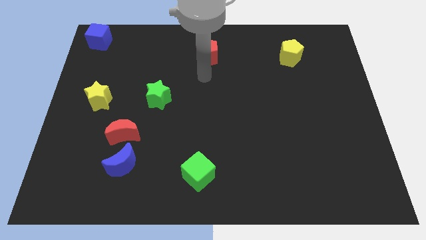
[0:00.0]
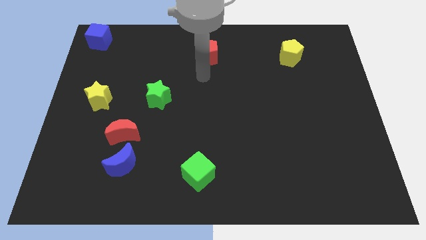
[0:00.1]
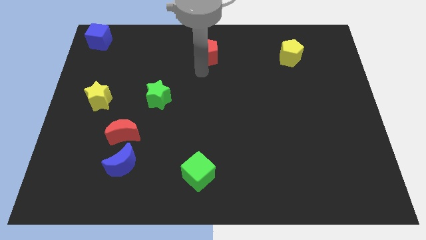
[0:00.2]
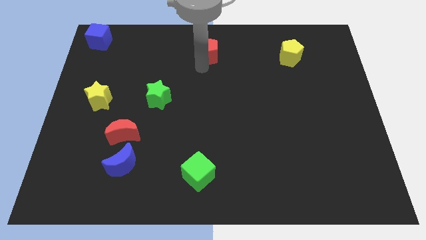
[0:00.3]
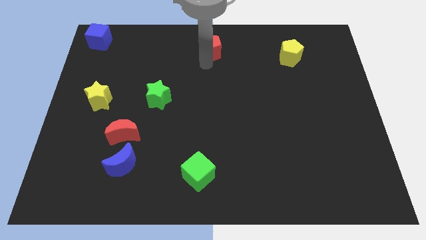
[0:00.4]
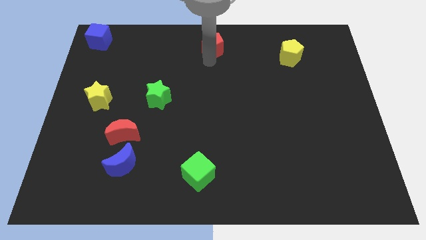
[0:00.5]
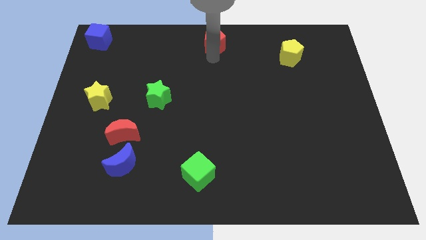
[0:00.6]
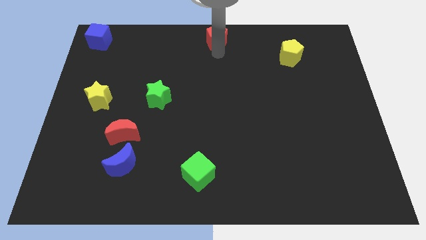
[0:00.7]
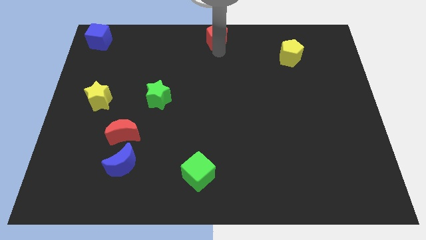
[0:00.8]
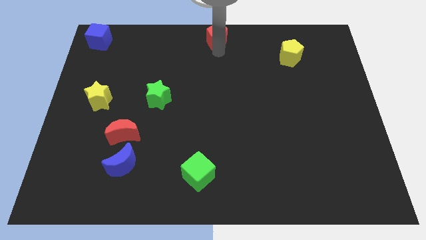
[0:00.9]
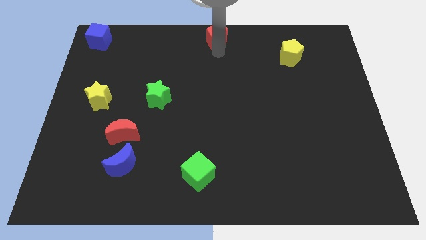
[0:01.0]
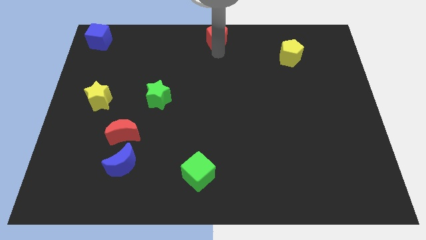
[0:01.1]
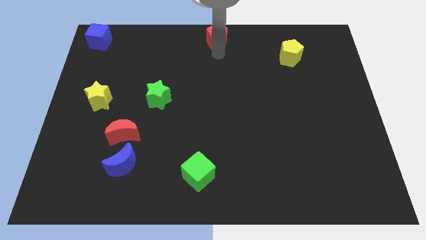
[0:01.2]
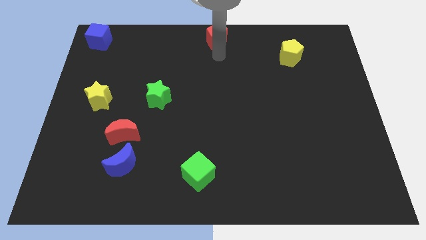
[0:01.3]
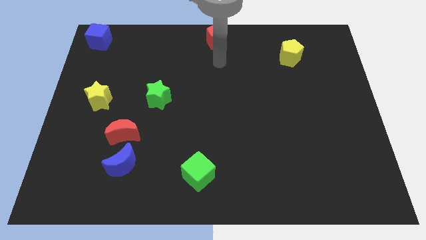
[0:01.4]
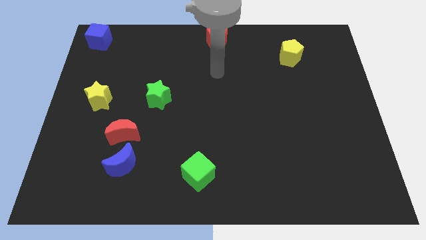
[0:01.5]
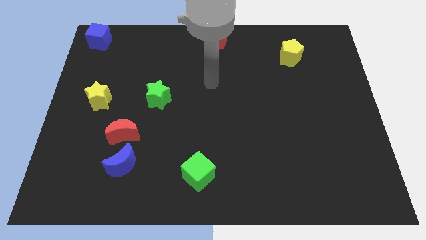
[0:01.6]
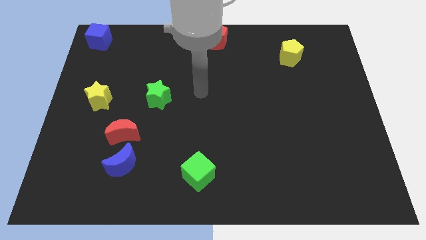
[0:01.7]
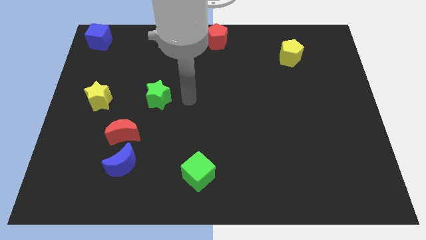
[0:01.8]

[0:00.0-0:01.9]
move red pentagon to the top center of the board

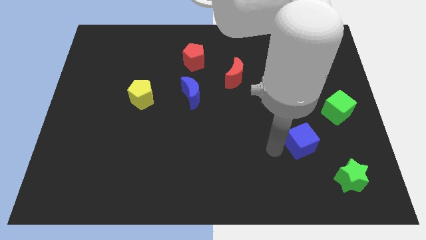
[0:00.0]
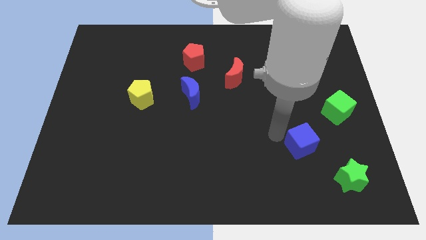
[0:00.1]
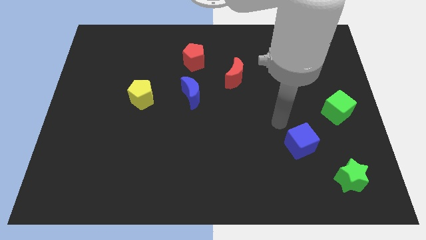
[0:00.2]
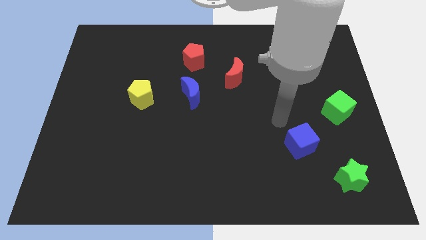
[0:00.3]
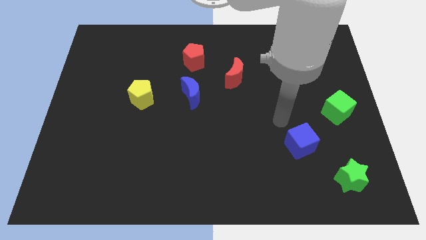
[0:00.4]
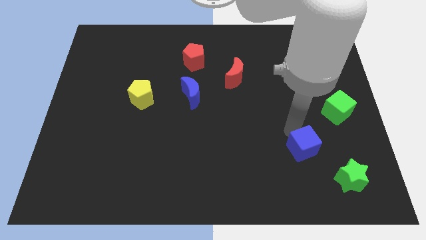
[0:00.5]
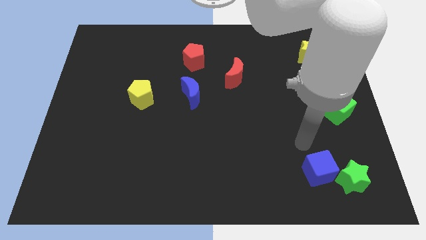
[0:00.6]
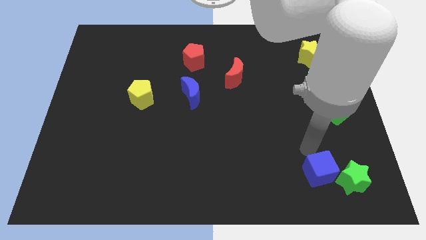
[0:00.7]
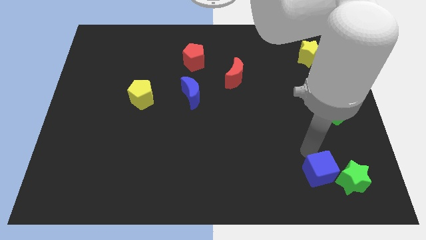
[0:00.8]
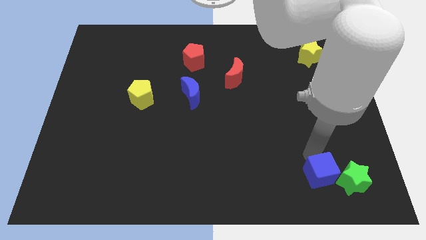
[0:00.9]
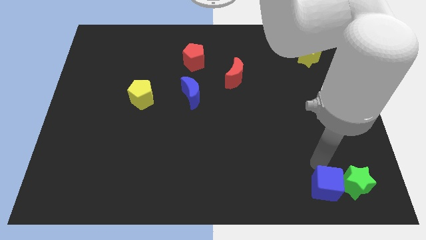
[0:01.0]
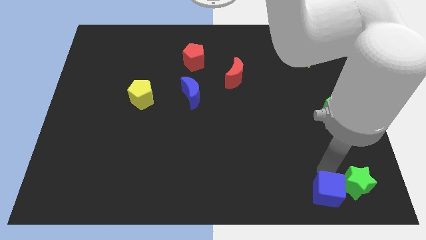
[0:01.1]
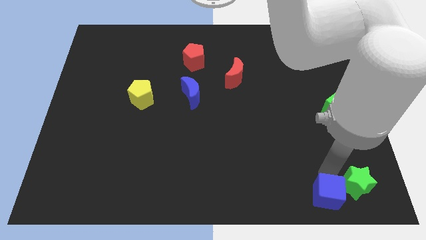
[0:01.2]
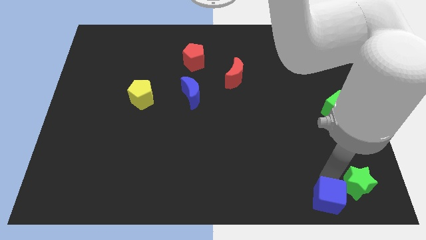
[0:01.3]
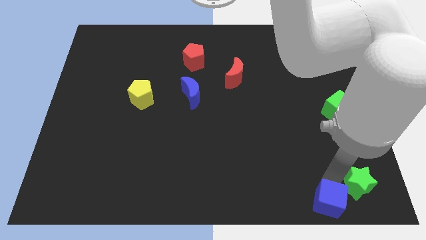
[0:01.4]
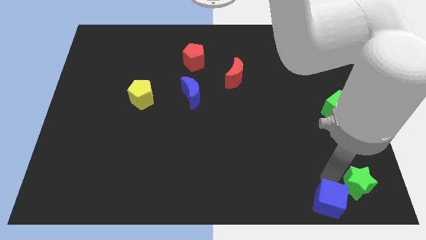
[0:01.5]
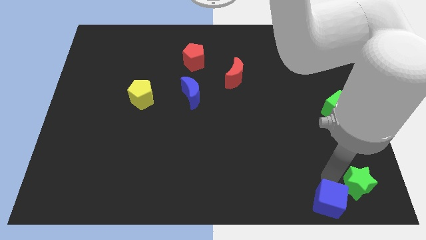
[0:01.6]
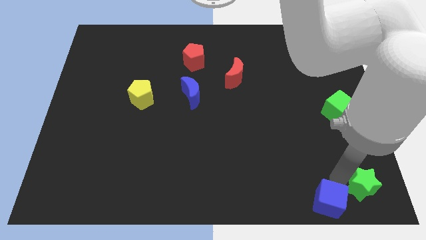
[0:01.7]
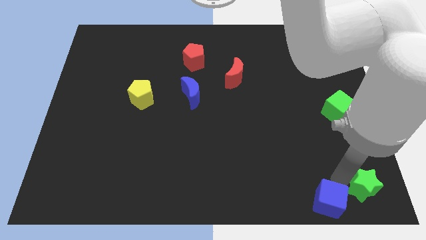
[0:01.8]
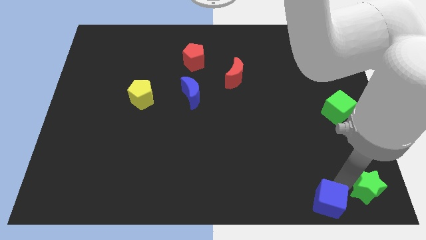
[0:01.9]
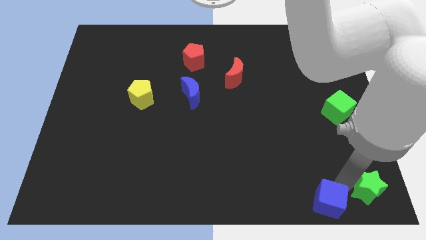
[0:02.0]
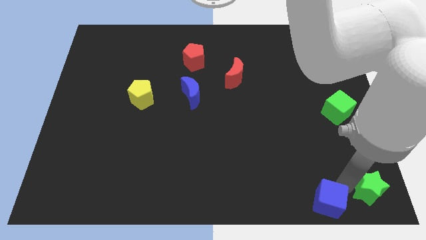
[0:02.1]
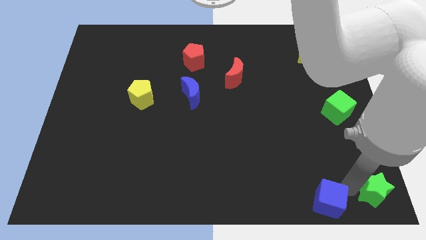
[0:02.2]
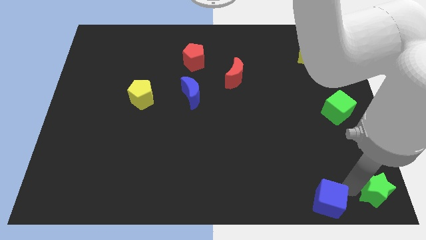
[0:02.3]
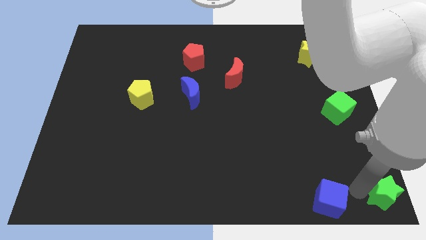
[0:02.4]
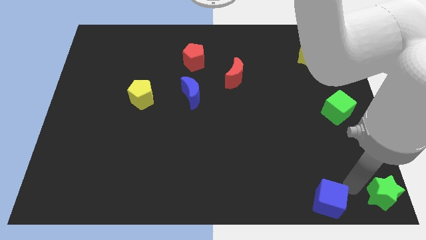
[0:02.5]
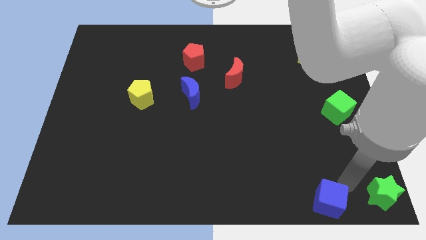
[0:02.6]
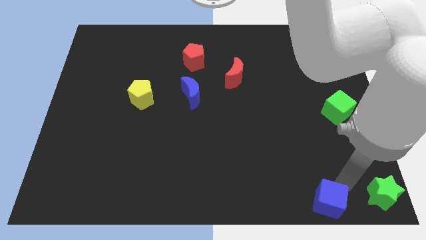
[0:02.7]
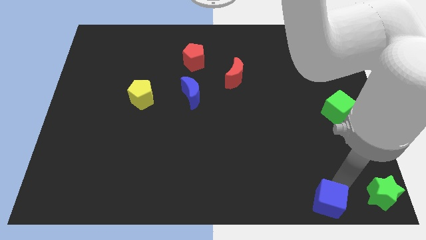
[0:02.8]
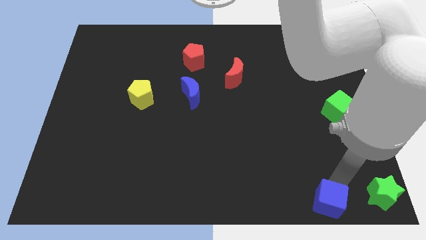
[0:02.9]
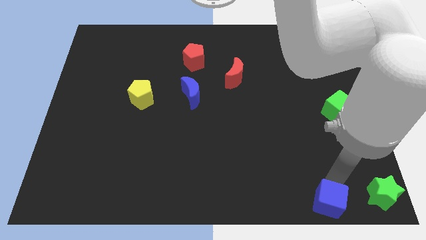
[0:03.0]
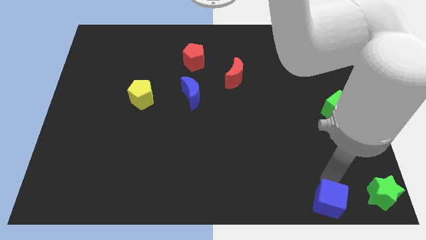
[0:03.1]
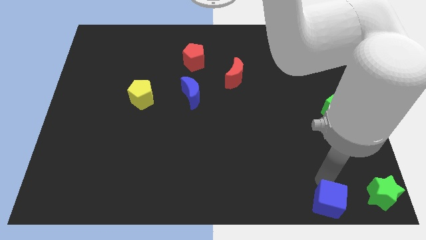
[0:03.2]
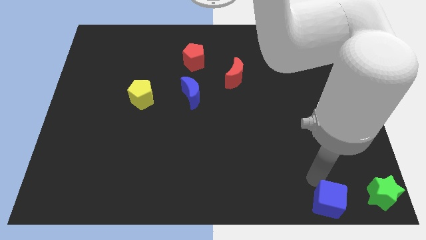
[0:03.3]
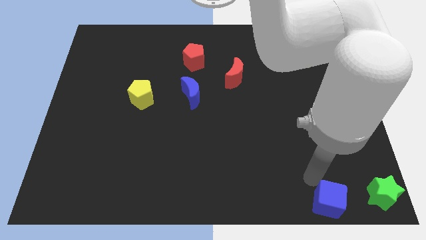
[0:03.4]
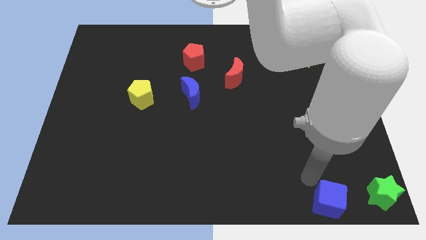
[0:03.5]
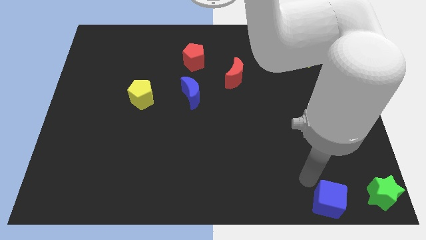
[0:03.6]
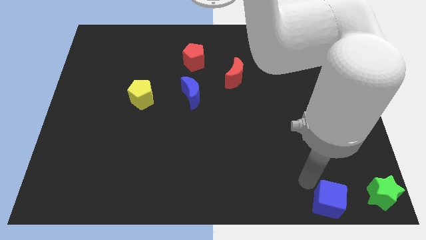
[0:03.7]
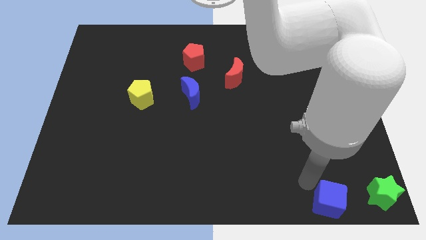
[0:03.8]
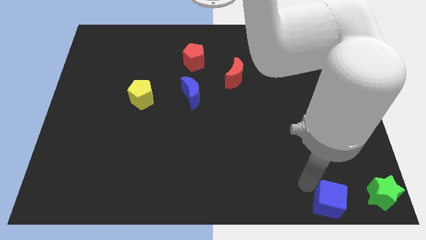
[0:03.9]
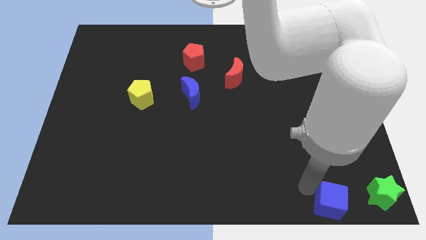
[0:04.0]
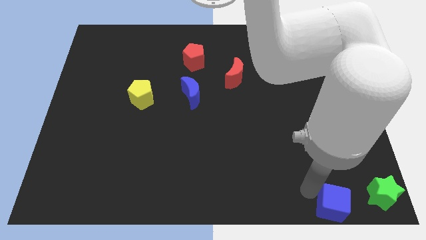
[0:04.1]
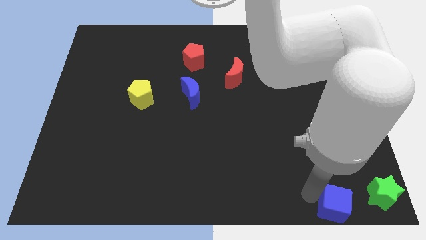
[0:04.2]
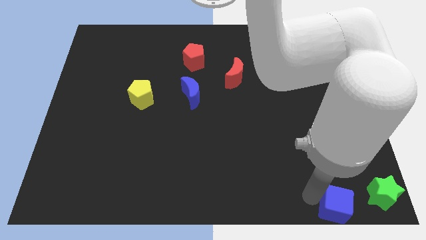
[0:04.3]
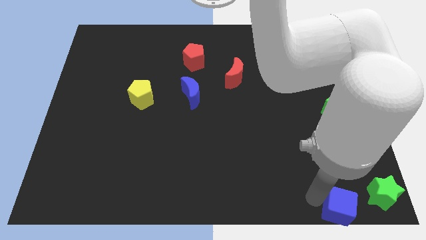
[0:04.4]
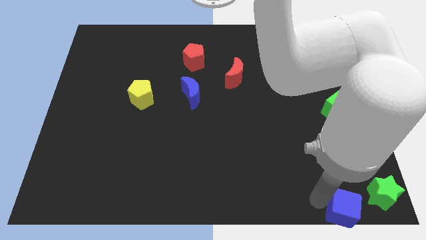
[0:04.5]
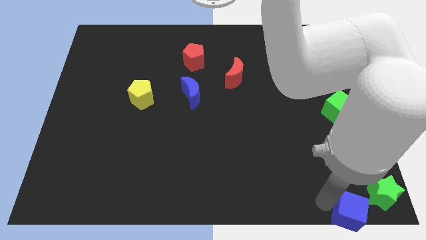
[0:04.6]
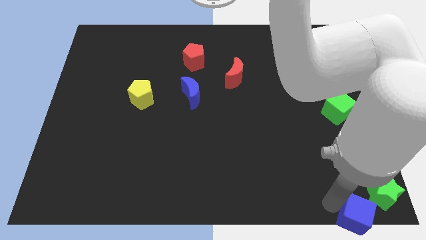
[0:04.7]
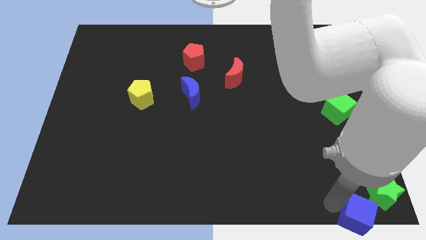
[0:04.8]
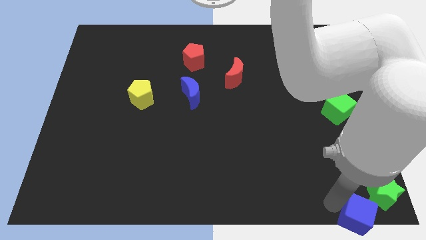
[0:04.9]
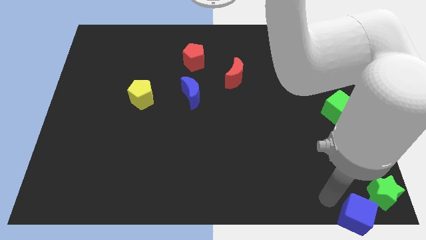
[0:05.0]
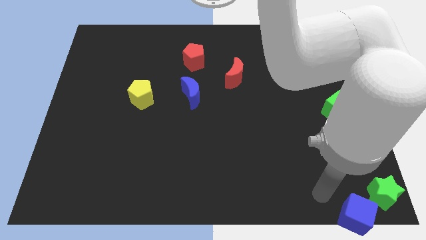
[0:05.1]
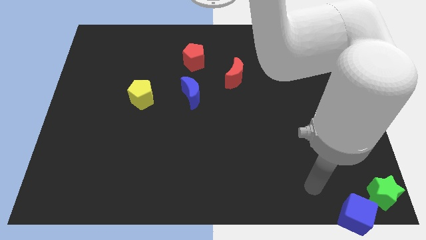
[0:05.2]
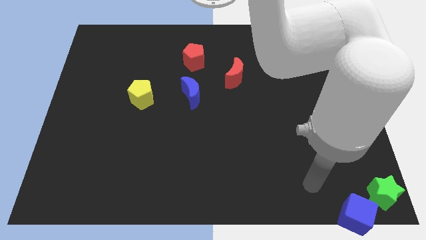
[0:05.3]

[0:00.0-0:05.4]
place the blue cube and green star to the bottom right corner of the board

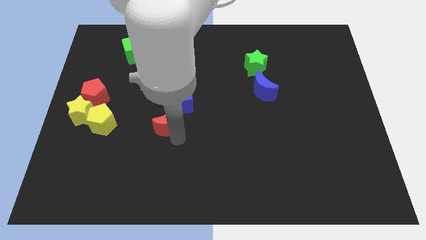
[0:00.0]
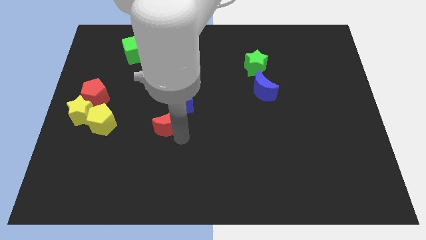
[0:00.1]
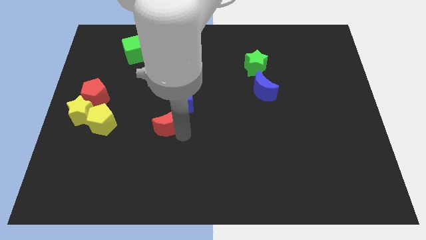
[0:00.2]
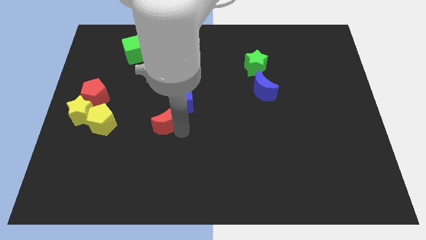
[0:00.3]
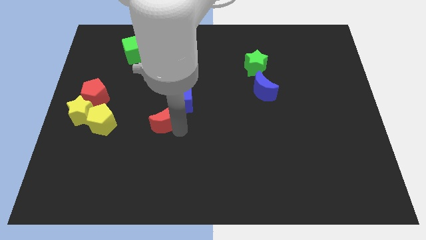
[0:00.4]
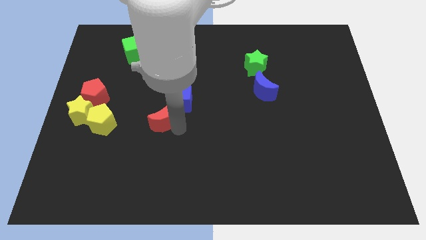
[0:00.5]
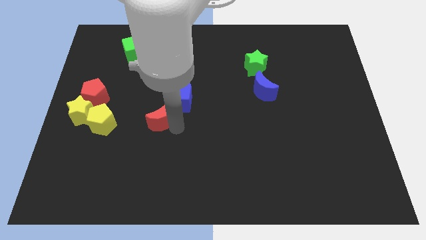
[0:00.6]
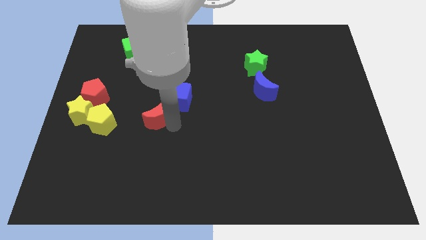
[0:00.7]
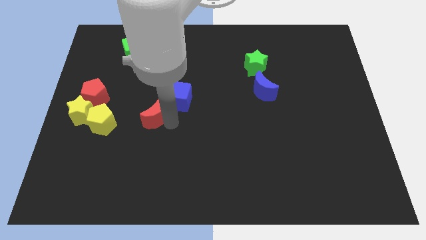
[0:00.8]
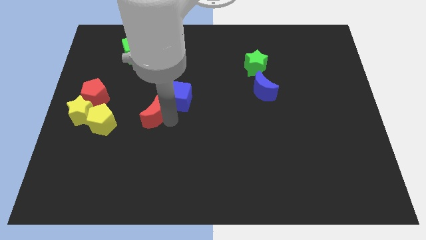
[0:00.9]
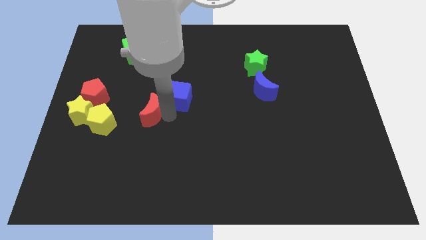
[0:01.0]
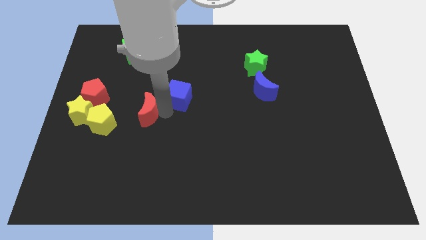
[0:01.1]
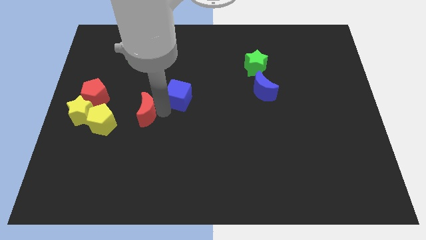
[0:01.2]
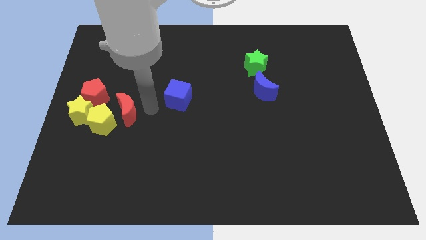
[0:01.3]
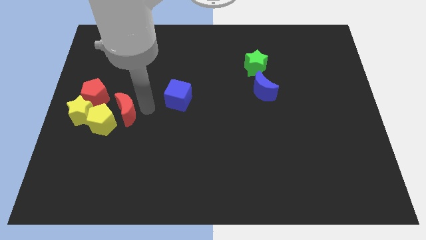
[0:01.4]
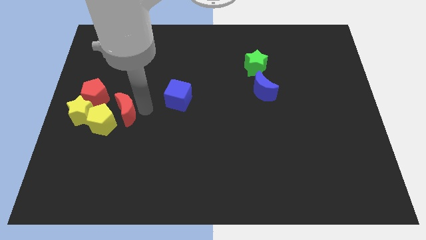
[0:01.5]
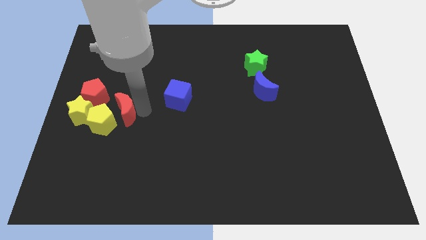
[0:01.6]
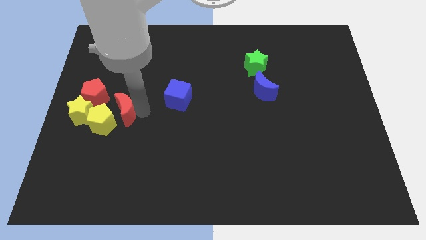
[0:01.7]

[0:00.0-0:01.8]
place red crescent beside yellow pentagon
